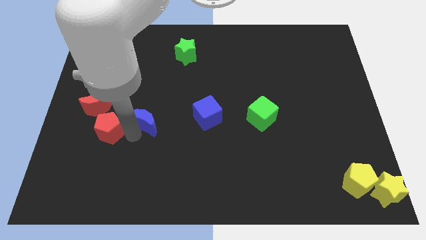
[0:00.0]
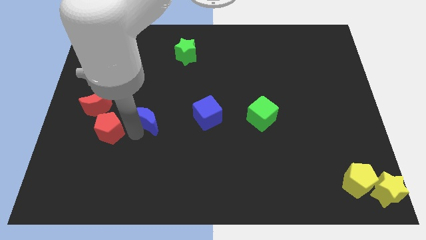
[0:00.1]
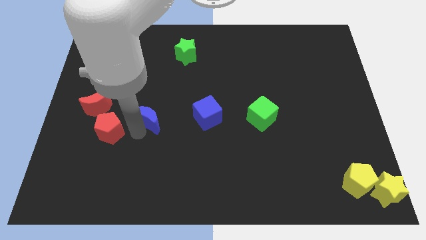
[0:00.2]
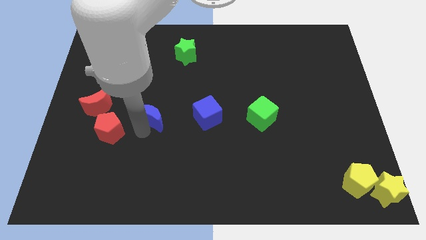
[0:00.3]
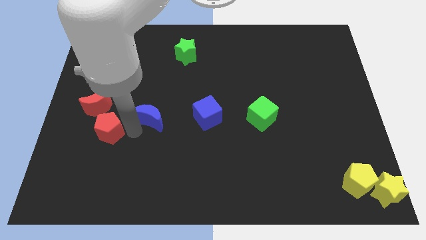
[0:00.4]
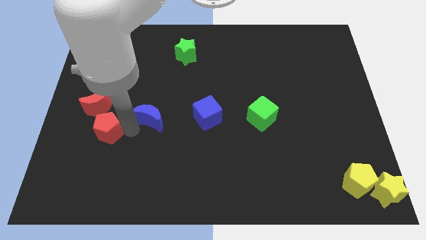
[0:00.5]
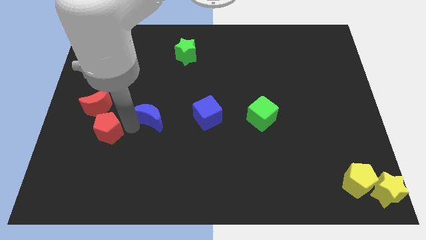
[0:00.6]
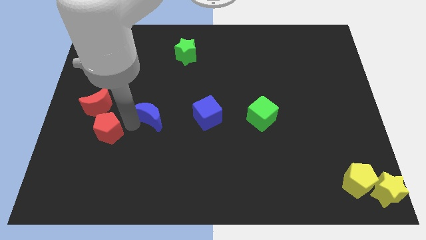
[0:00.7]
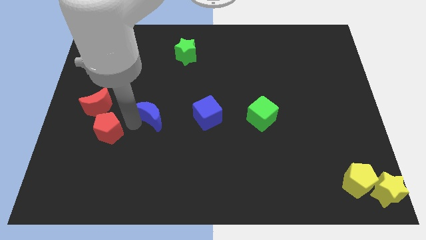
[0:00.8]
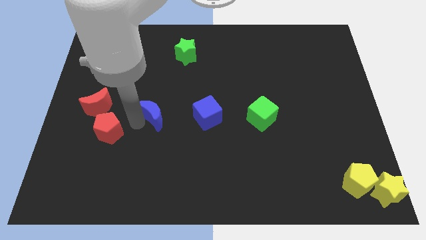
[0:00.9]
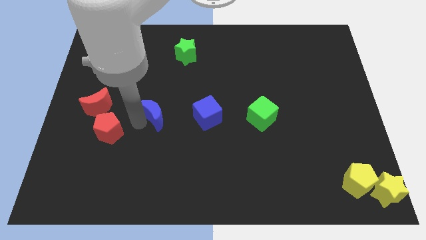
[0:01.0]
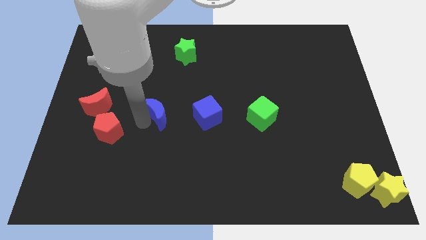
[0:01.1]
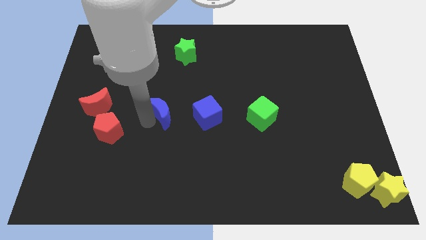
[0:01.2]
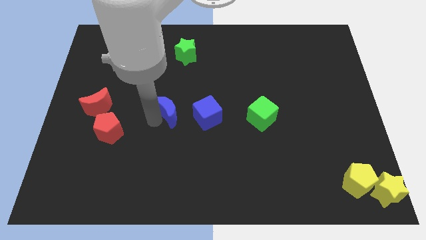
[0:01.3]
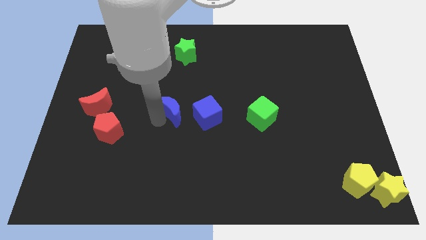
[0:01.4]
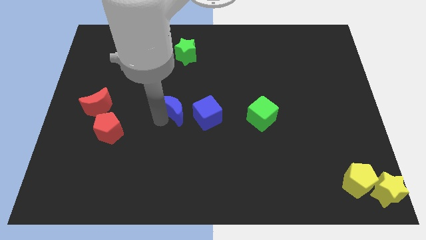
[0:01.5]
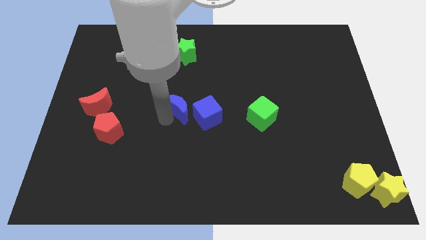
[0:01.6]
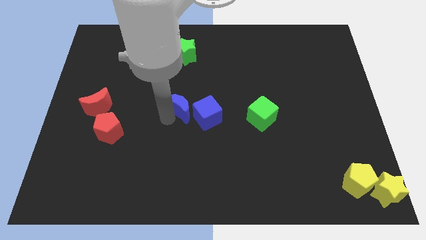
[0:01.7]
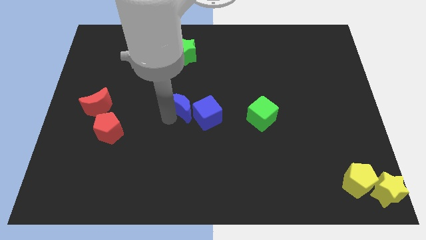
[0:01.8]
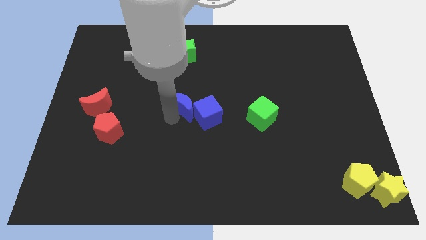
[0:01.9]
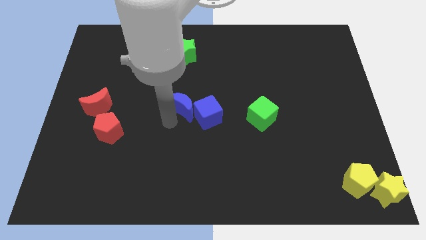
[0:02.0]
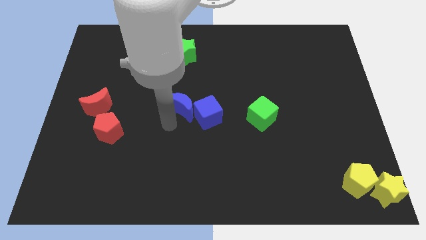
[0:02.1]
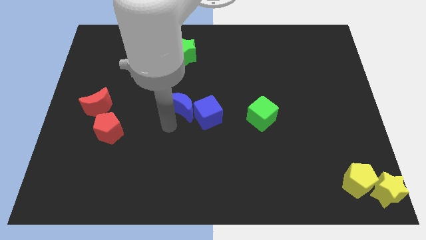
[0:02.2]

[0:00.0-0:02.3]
push the blue moon into blue cube

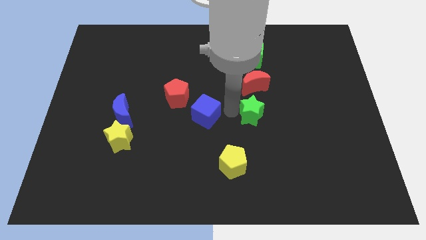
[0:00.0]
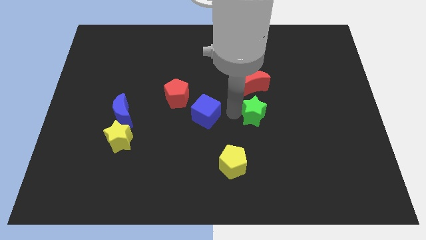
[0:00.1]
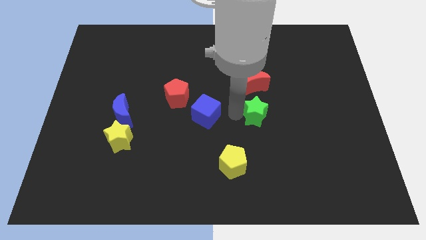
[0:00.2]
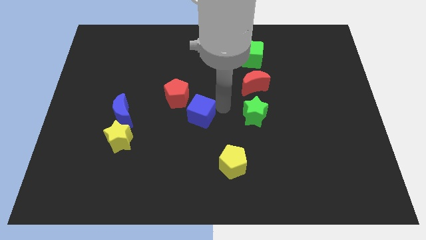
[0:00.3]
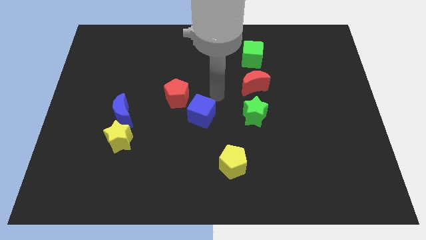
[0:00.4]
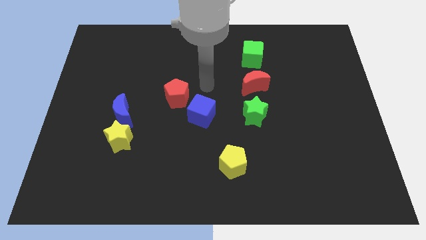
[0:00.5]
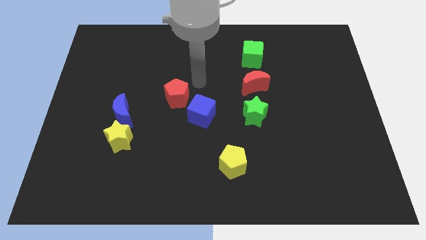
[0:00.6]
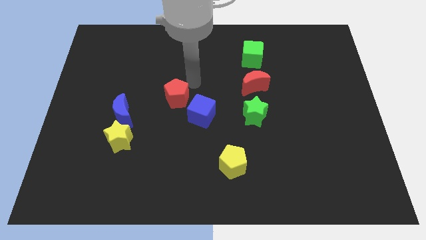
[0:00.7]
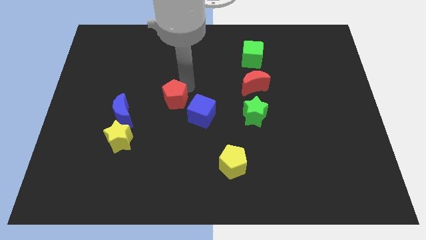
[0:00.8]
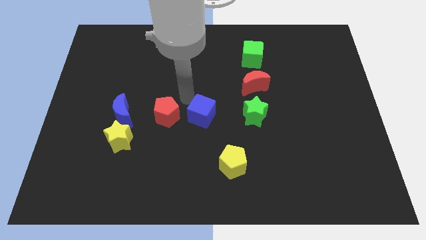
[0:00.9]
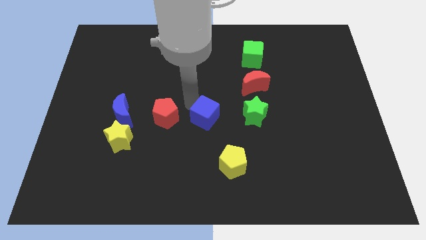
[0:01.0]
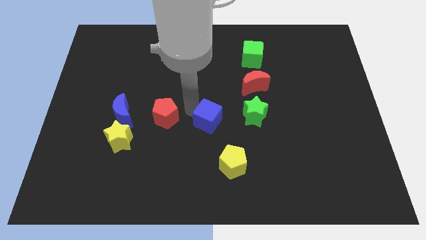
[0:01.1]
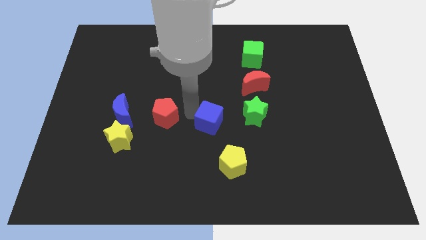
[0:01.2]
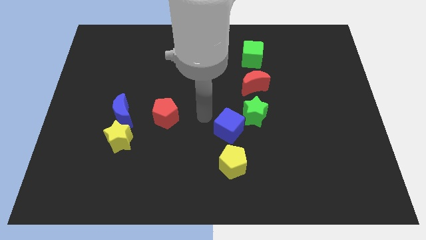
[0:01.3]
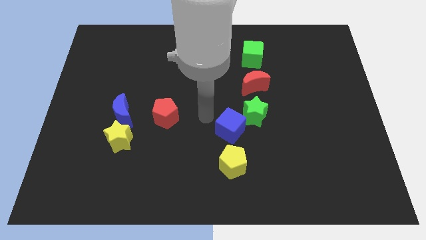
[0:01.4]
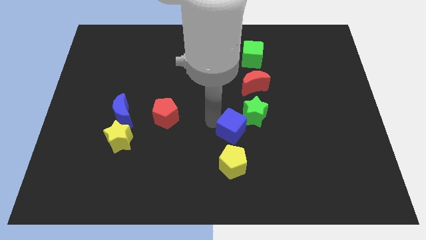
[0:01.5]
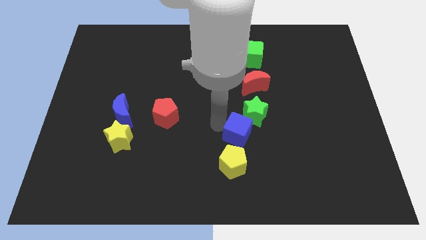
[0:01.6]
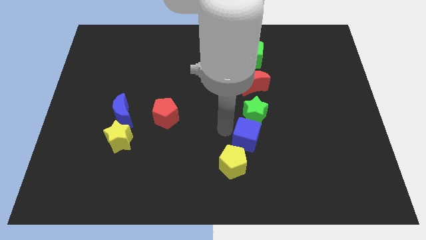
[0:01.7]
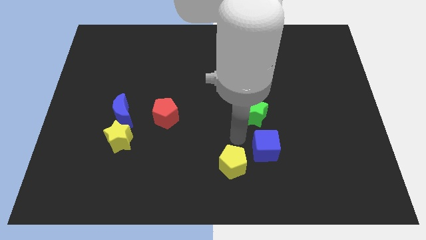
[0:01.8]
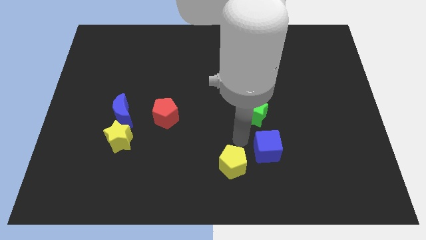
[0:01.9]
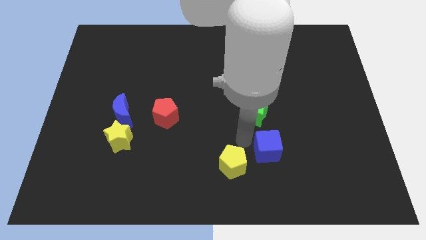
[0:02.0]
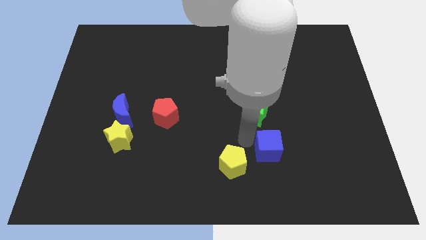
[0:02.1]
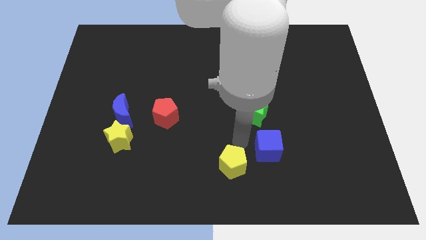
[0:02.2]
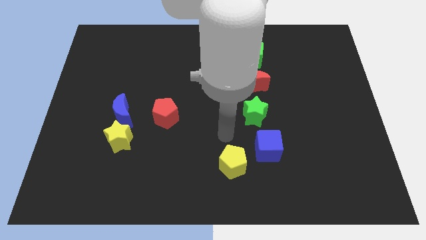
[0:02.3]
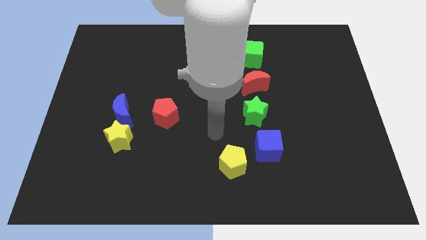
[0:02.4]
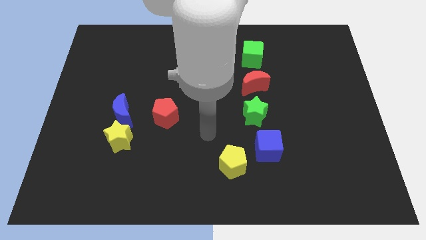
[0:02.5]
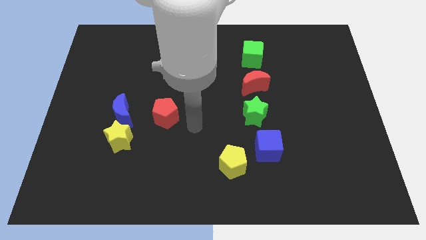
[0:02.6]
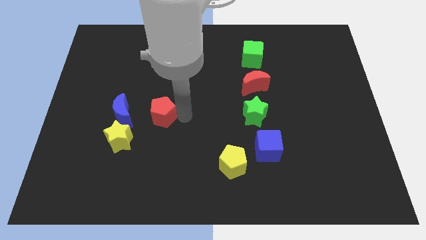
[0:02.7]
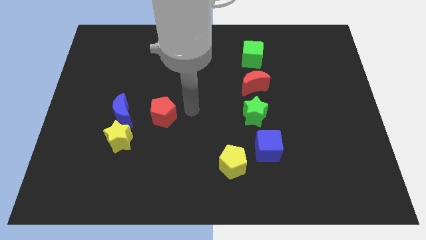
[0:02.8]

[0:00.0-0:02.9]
place the blue cube at the right of the yellow pentagon

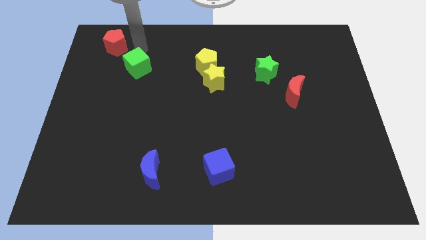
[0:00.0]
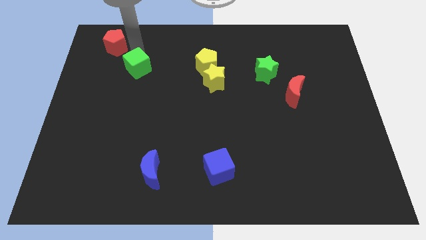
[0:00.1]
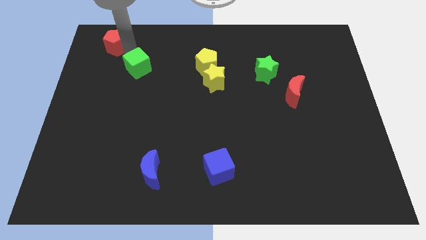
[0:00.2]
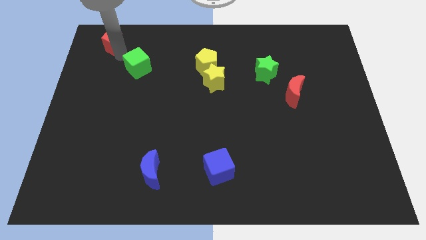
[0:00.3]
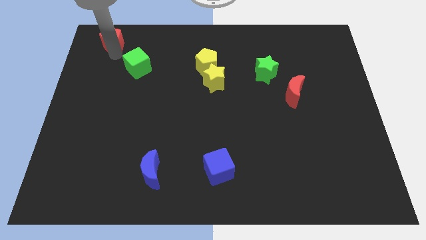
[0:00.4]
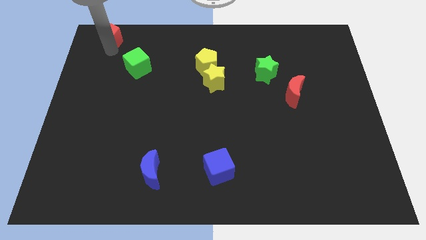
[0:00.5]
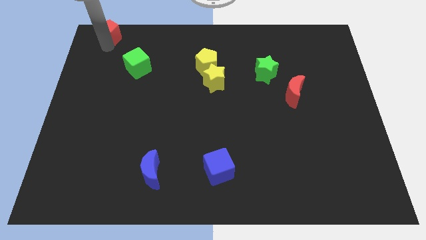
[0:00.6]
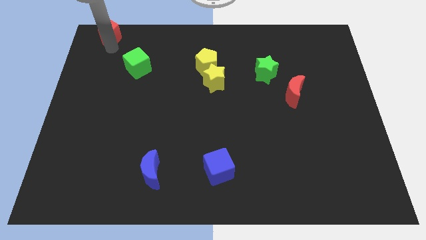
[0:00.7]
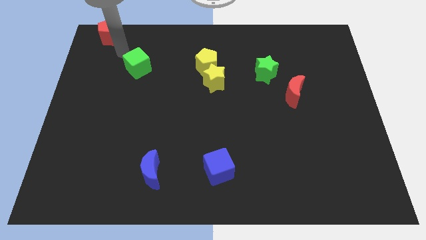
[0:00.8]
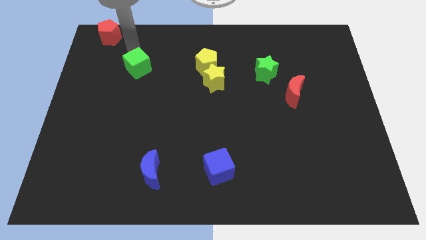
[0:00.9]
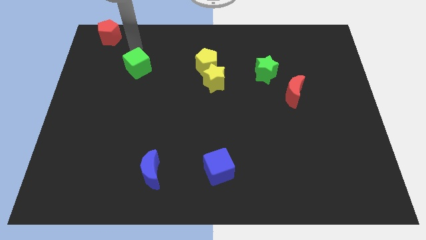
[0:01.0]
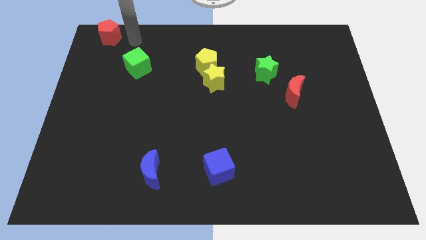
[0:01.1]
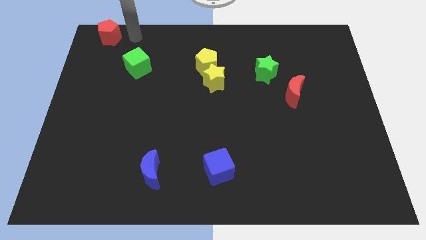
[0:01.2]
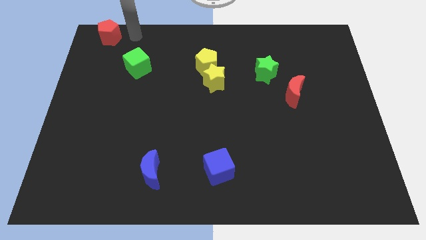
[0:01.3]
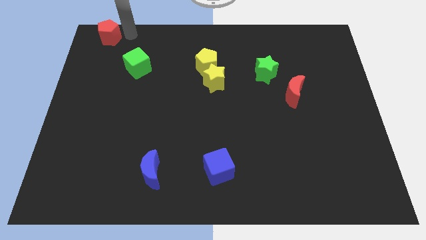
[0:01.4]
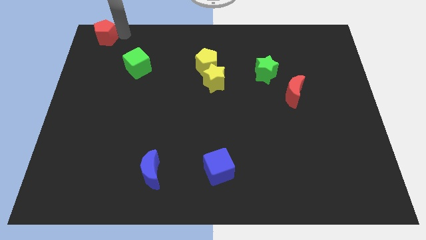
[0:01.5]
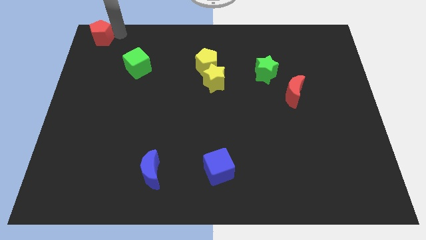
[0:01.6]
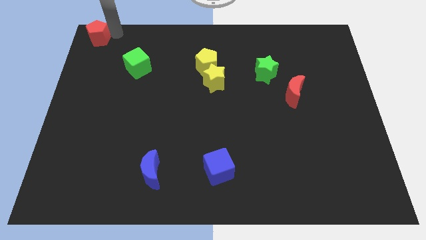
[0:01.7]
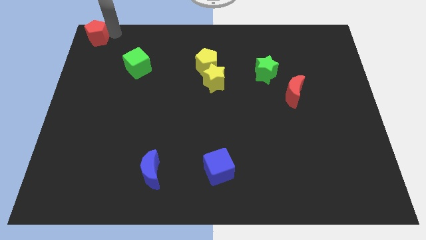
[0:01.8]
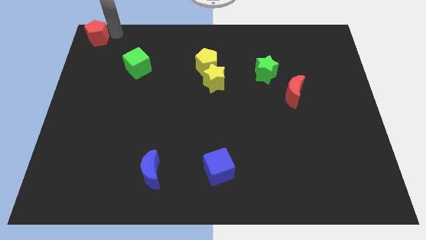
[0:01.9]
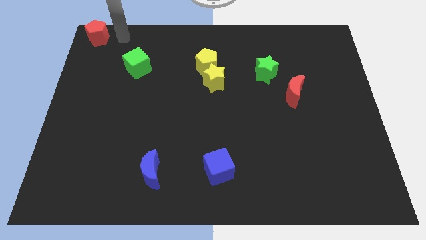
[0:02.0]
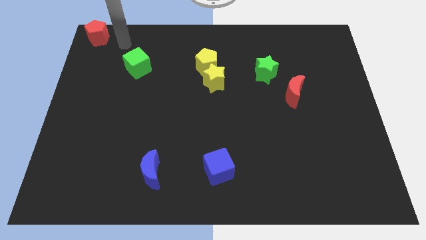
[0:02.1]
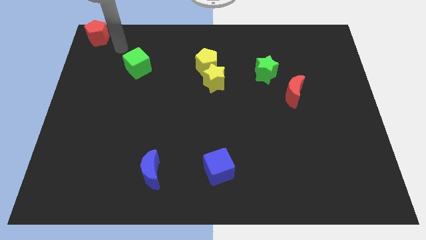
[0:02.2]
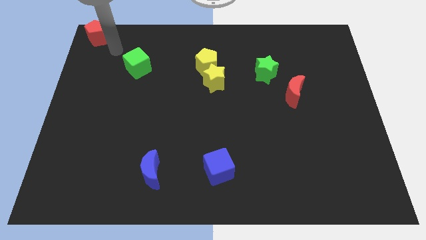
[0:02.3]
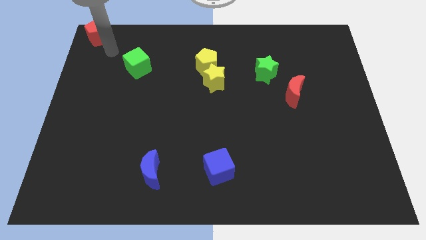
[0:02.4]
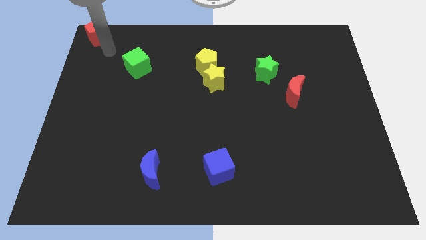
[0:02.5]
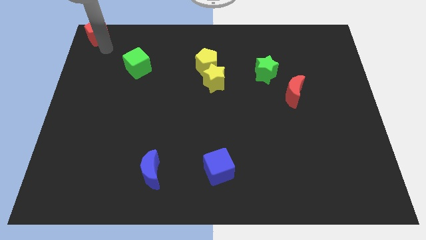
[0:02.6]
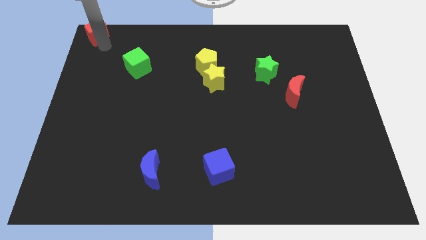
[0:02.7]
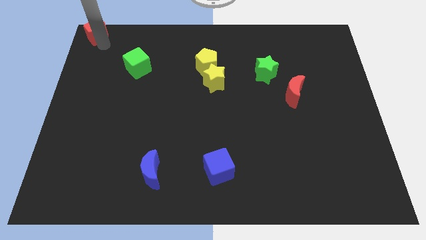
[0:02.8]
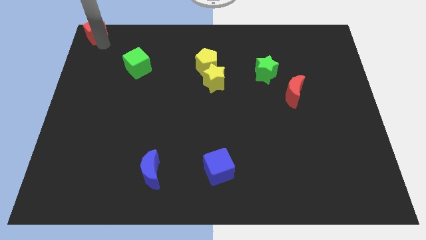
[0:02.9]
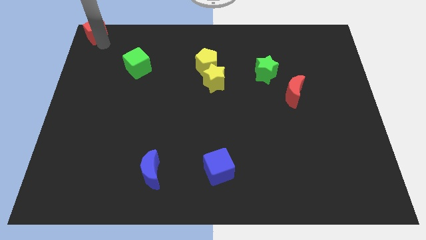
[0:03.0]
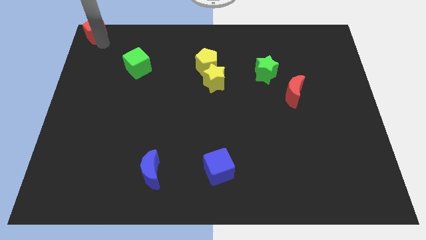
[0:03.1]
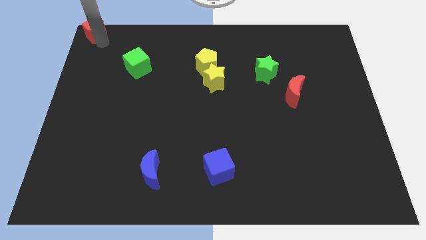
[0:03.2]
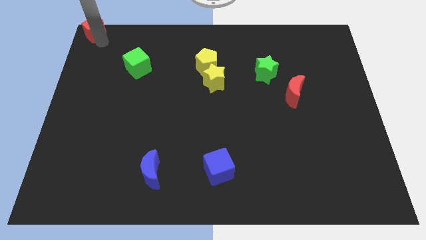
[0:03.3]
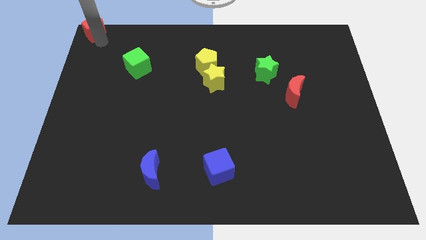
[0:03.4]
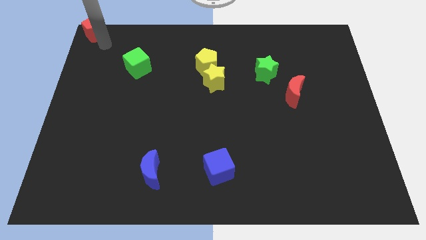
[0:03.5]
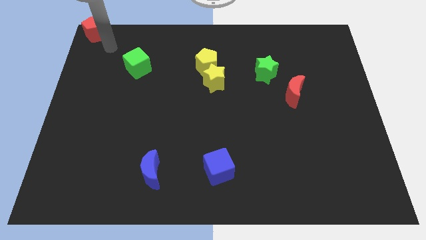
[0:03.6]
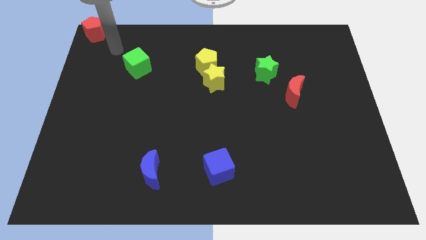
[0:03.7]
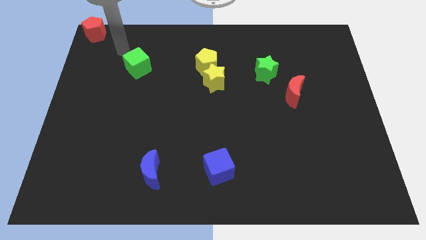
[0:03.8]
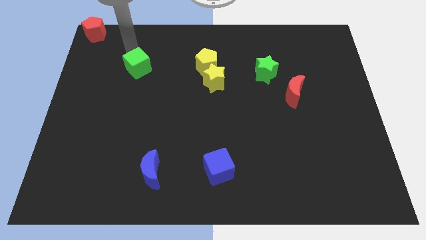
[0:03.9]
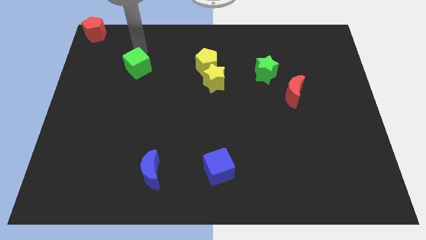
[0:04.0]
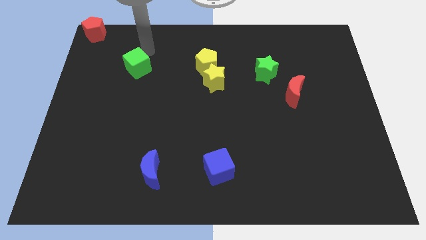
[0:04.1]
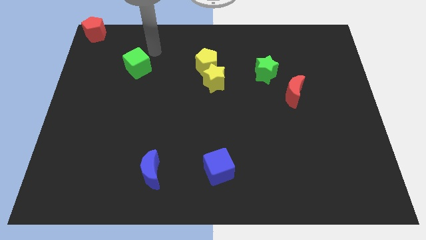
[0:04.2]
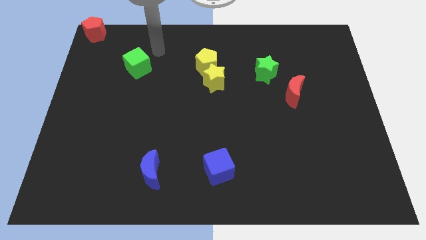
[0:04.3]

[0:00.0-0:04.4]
move the red pentagon to the top left corner of the board
